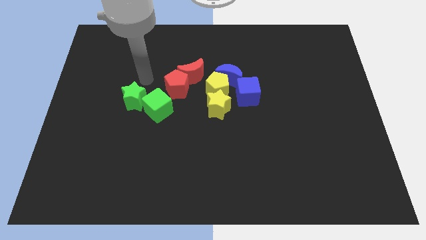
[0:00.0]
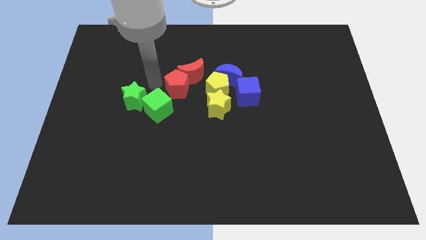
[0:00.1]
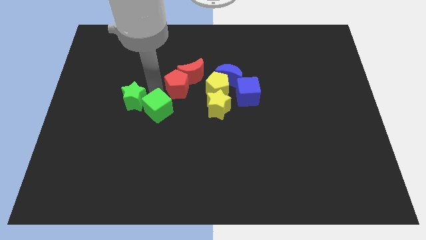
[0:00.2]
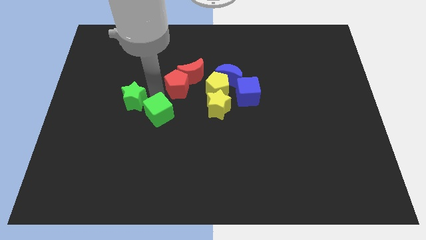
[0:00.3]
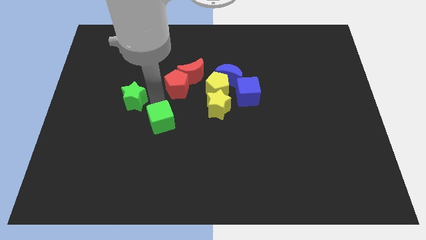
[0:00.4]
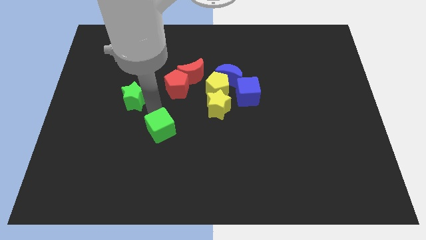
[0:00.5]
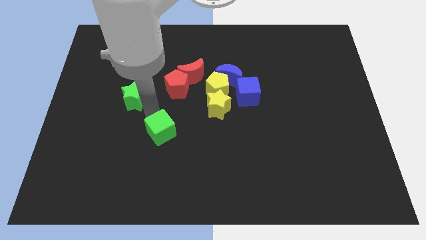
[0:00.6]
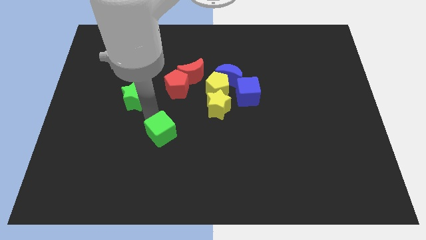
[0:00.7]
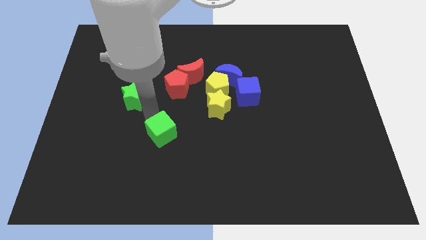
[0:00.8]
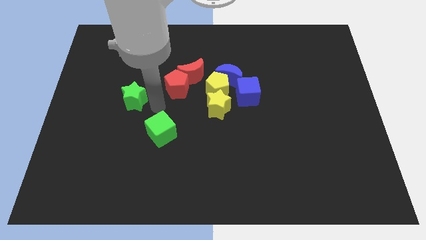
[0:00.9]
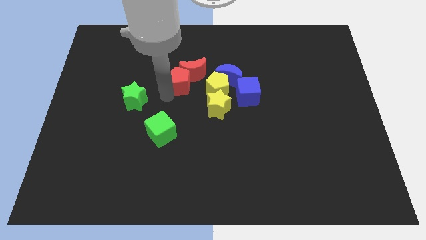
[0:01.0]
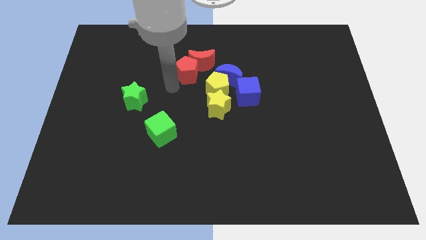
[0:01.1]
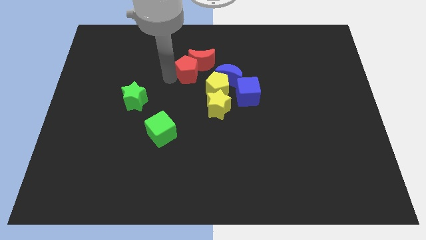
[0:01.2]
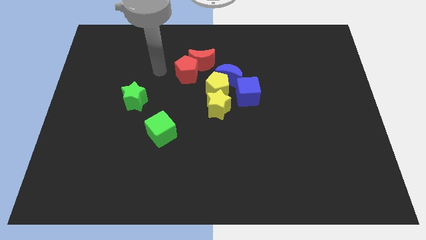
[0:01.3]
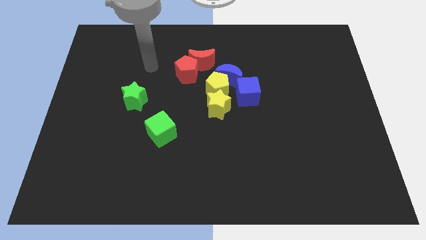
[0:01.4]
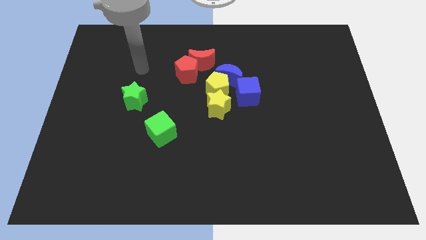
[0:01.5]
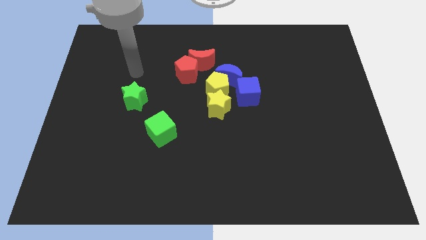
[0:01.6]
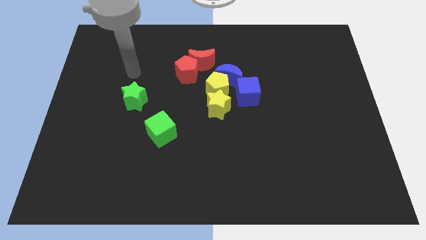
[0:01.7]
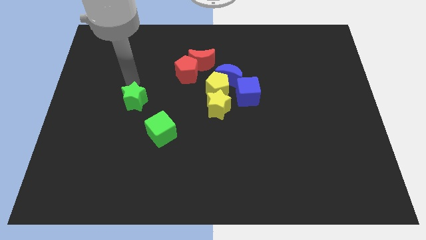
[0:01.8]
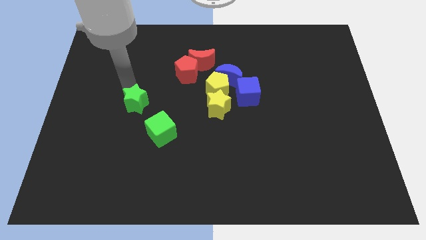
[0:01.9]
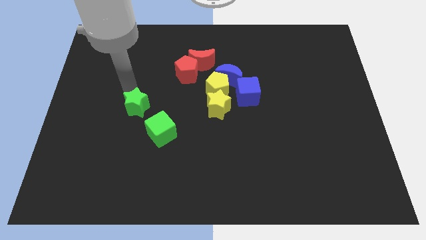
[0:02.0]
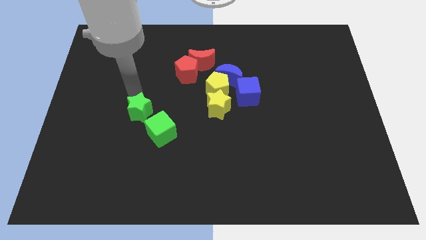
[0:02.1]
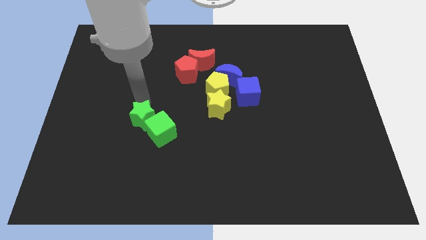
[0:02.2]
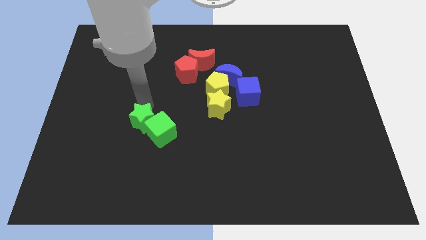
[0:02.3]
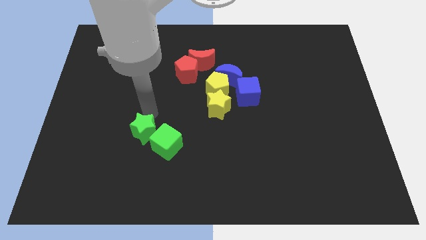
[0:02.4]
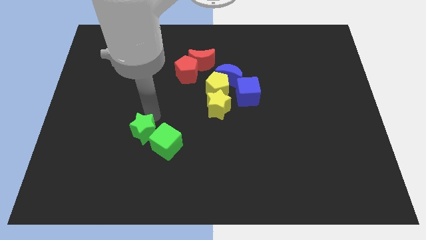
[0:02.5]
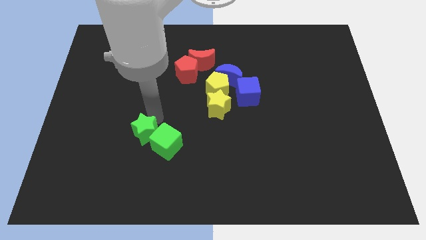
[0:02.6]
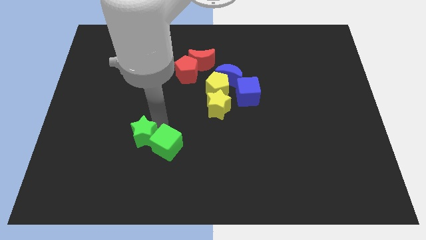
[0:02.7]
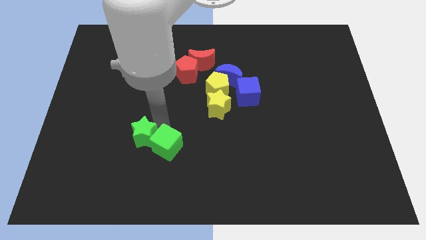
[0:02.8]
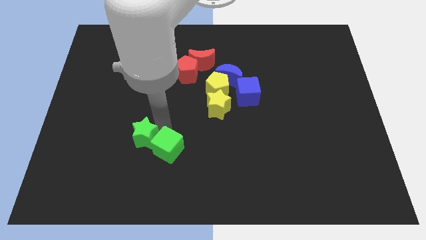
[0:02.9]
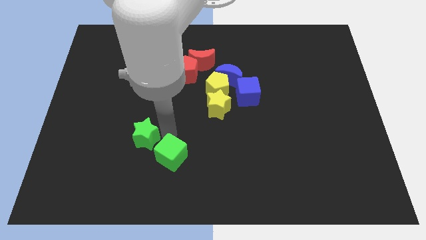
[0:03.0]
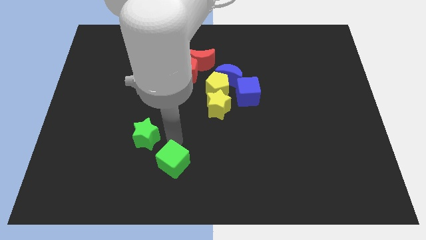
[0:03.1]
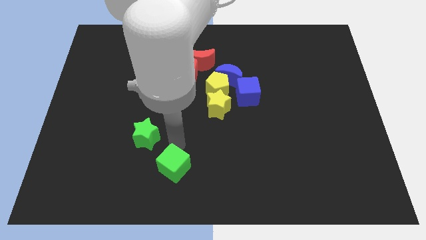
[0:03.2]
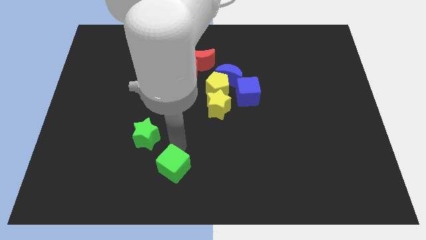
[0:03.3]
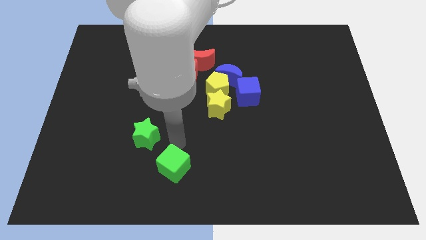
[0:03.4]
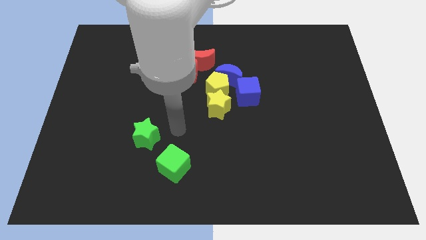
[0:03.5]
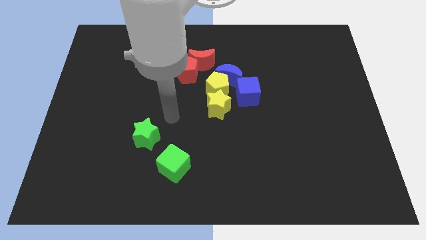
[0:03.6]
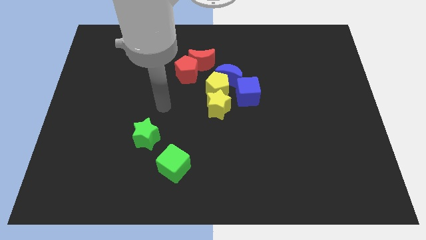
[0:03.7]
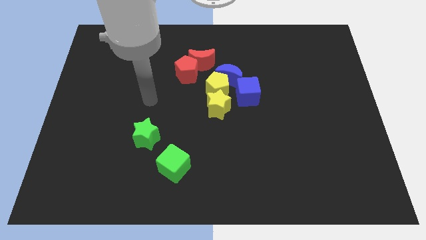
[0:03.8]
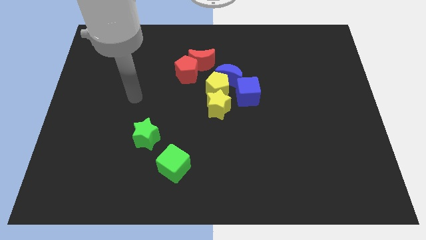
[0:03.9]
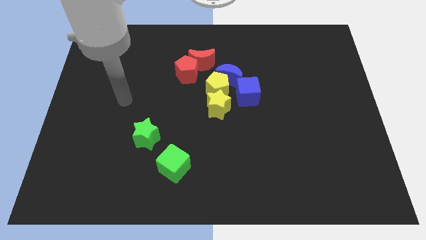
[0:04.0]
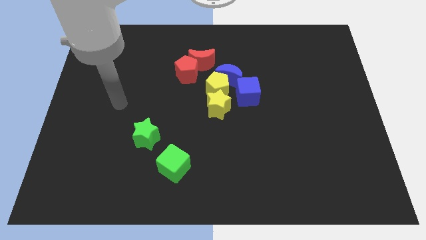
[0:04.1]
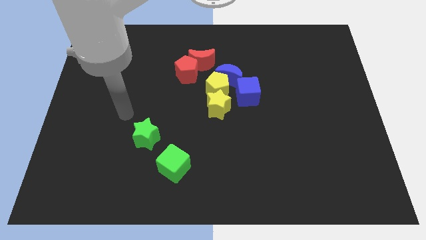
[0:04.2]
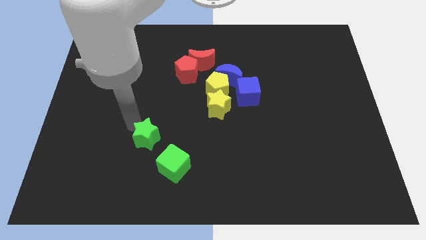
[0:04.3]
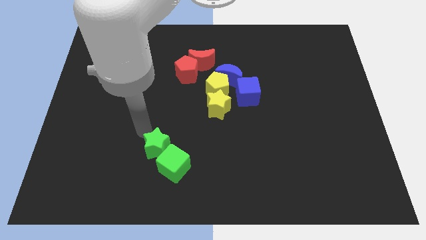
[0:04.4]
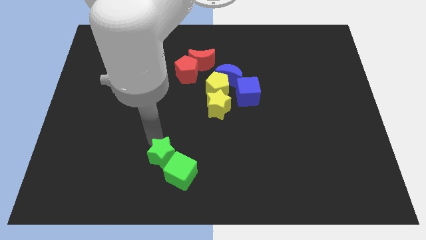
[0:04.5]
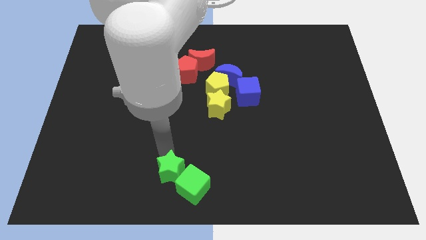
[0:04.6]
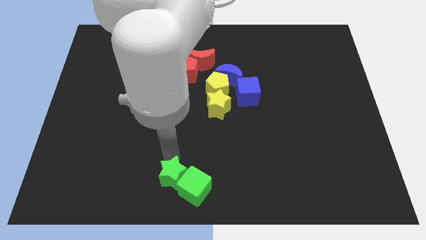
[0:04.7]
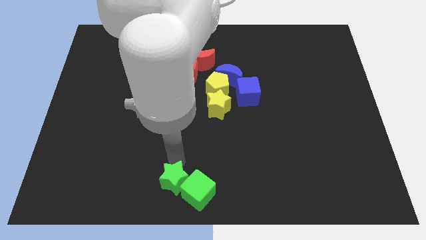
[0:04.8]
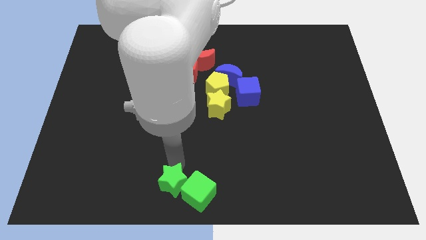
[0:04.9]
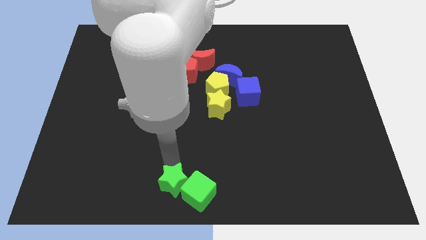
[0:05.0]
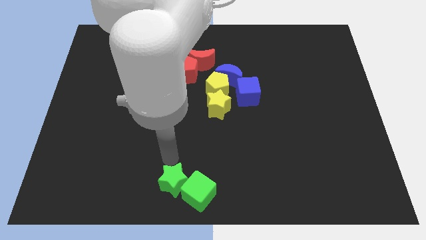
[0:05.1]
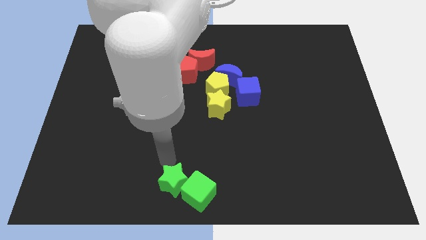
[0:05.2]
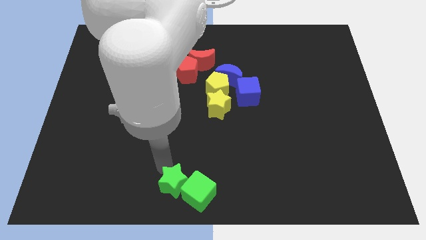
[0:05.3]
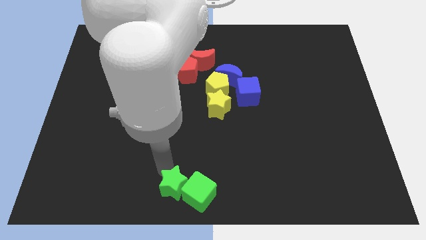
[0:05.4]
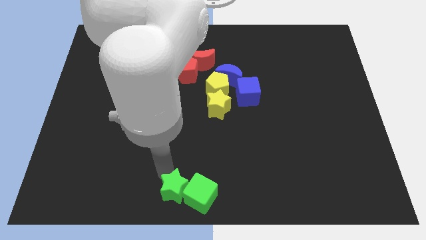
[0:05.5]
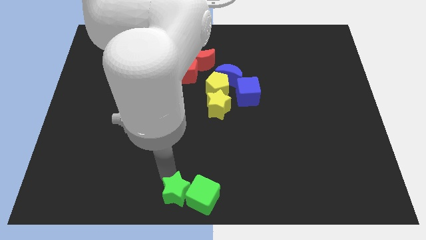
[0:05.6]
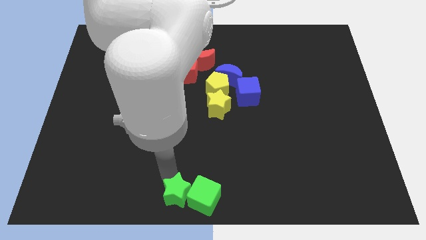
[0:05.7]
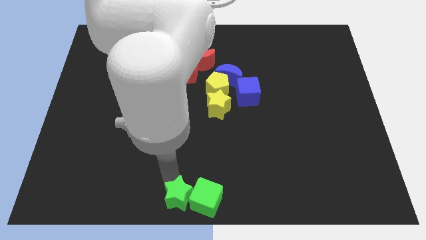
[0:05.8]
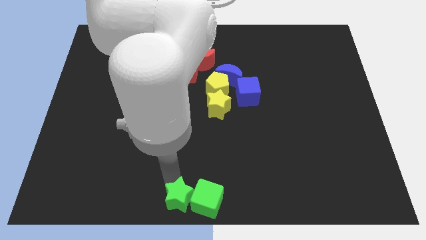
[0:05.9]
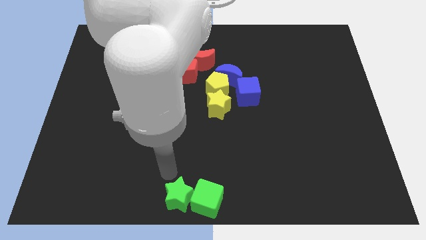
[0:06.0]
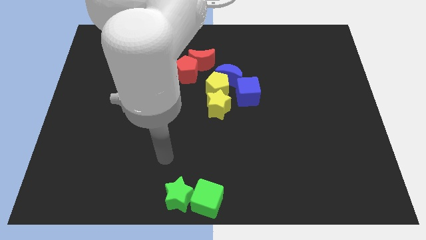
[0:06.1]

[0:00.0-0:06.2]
push the green star into the green cube

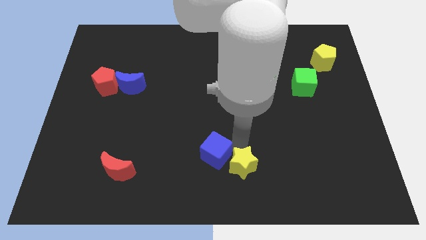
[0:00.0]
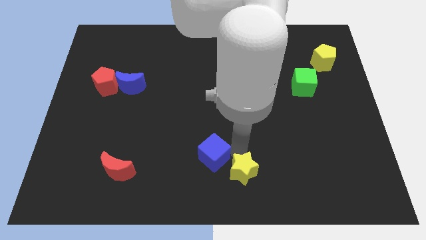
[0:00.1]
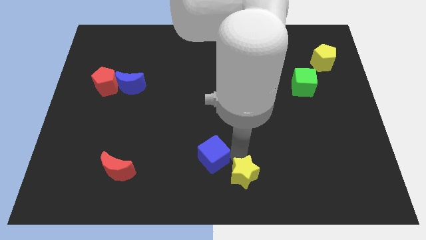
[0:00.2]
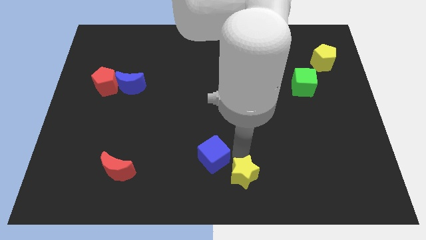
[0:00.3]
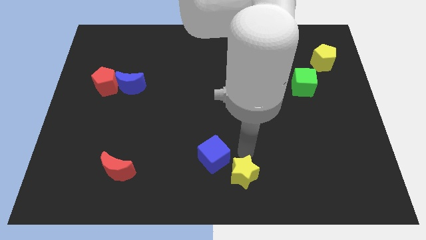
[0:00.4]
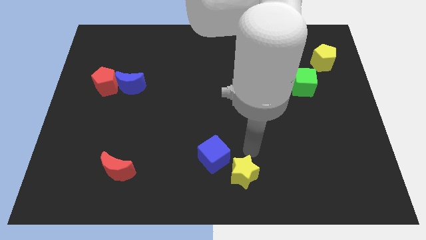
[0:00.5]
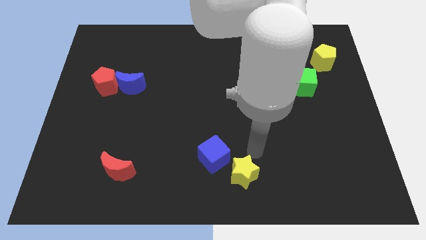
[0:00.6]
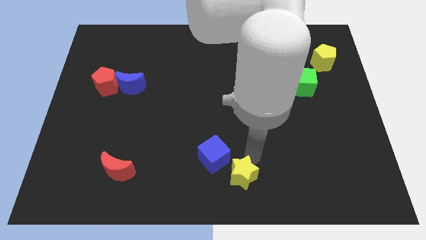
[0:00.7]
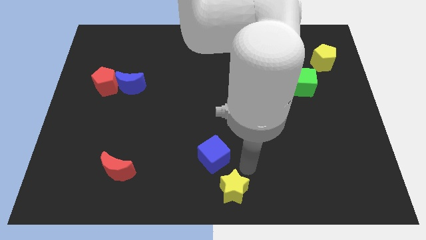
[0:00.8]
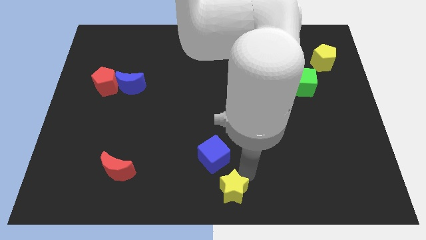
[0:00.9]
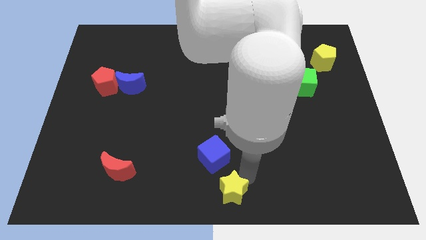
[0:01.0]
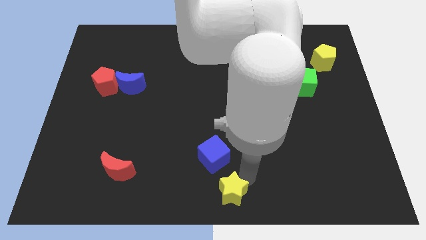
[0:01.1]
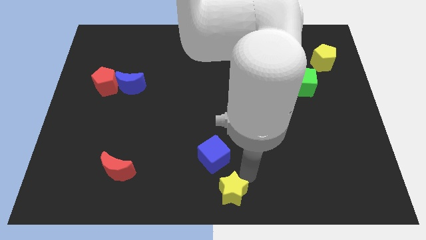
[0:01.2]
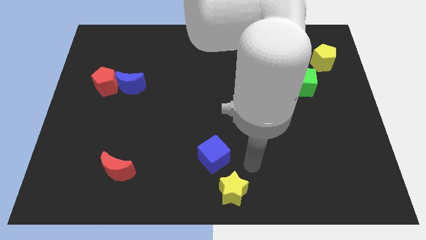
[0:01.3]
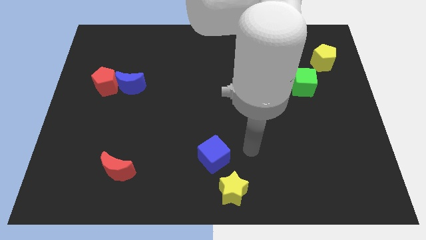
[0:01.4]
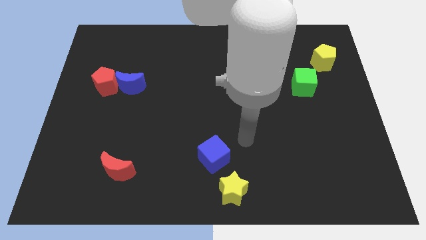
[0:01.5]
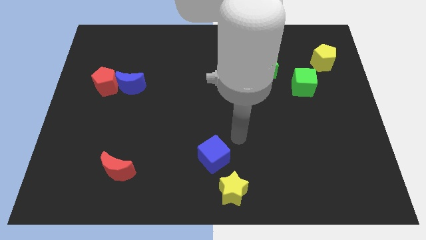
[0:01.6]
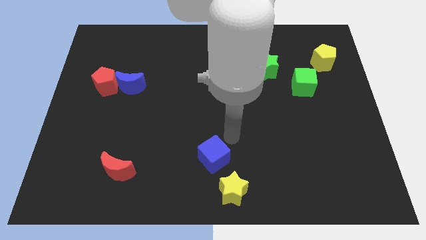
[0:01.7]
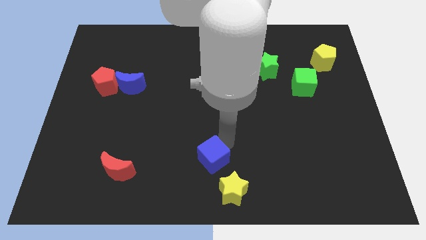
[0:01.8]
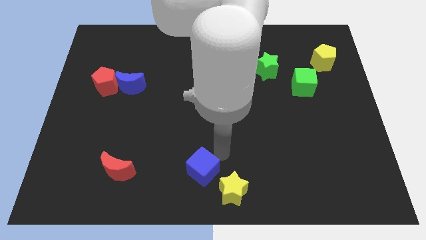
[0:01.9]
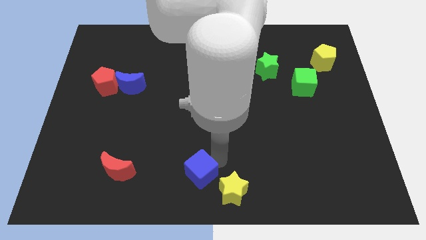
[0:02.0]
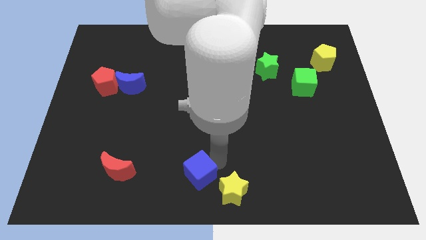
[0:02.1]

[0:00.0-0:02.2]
push the yellow star and blue cube towards the bottom center of the board

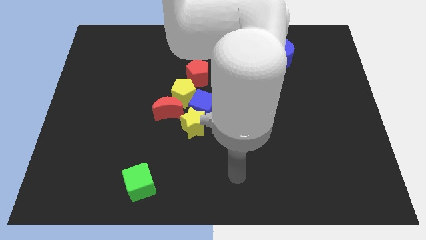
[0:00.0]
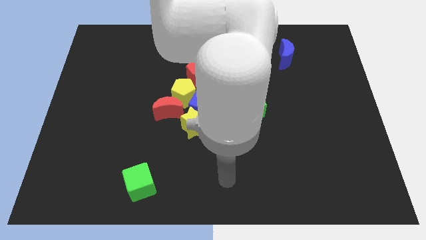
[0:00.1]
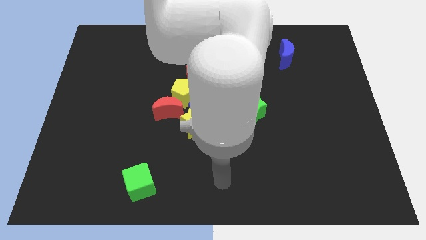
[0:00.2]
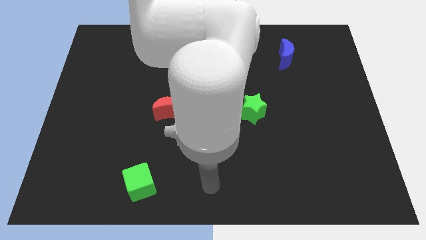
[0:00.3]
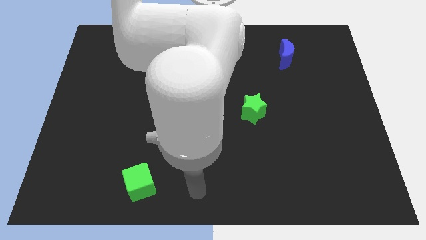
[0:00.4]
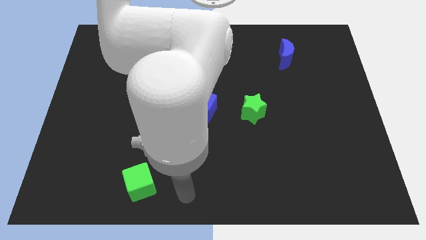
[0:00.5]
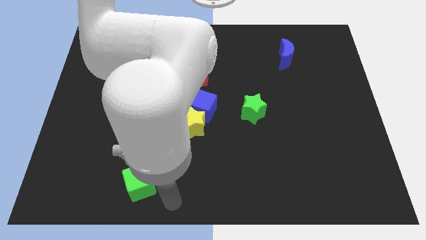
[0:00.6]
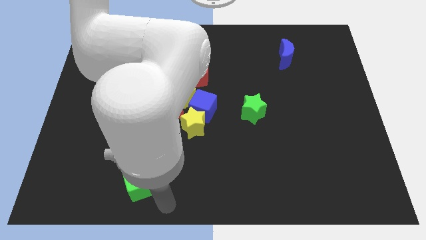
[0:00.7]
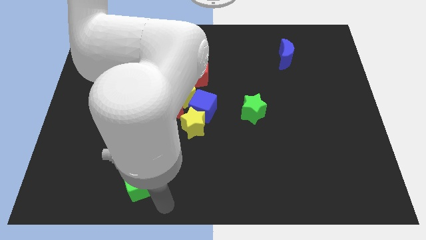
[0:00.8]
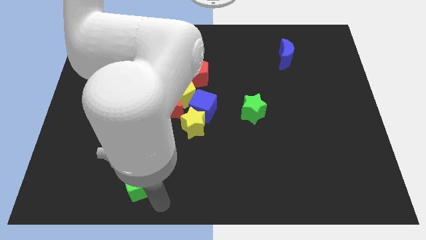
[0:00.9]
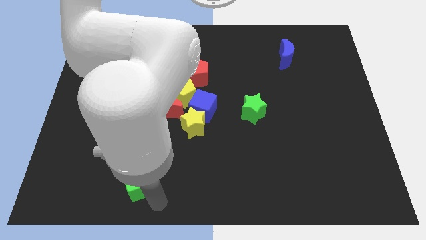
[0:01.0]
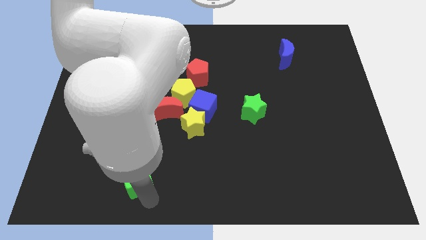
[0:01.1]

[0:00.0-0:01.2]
place the arm below the green cube
